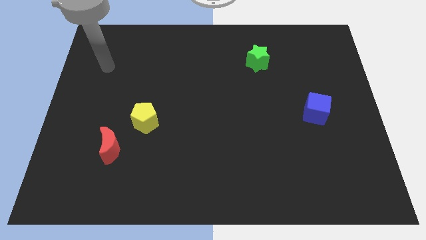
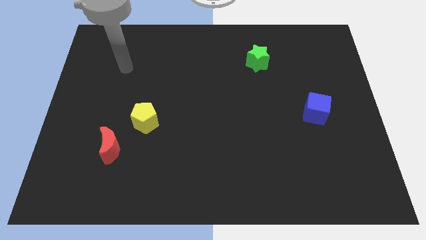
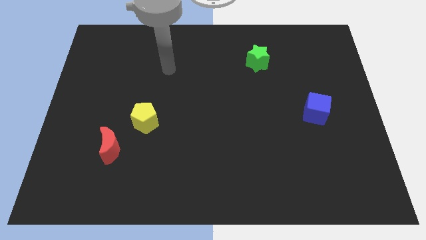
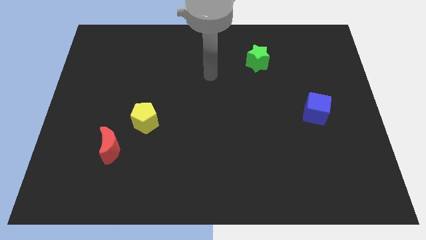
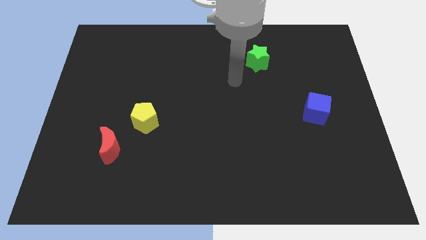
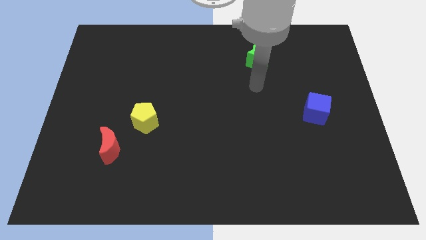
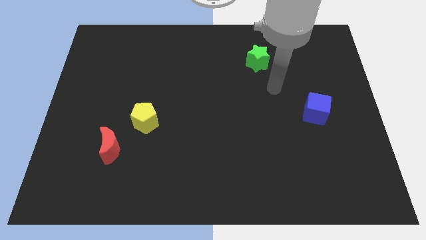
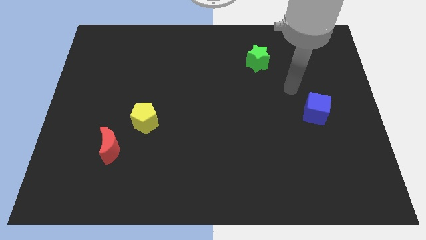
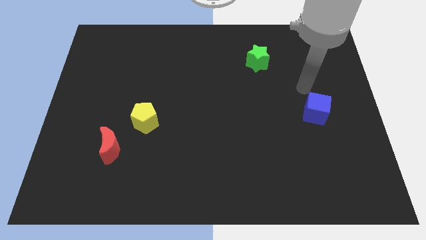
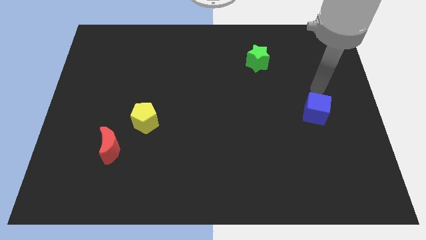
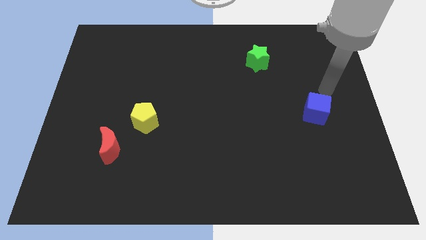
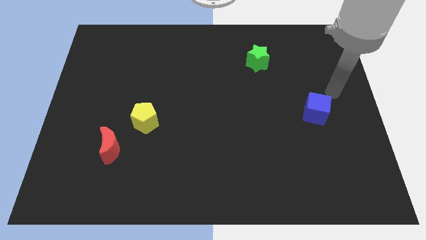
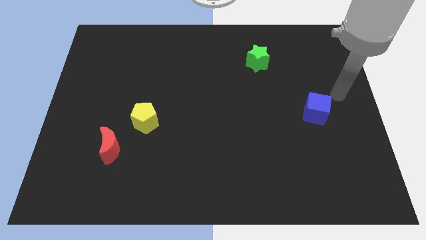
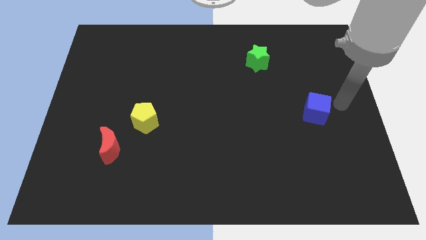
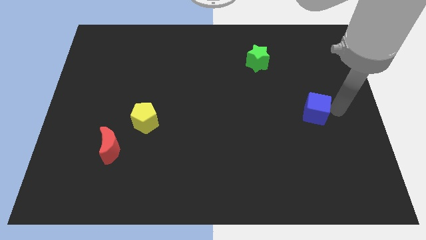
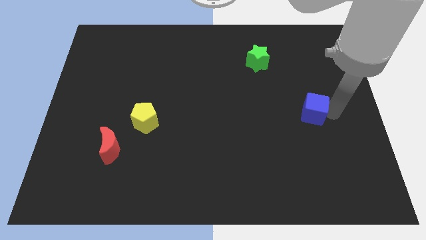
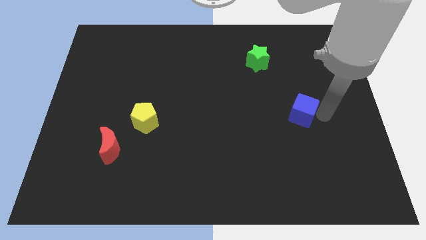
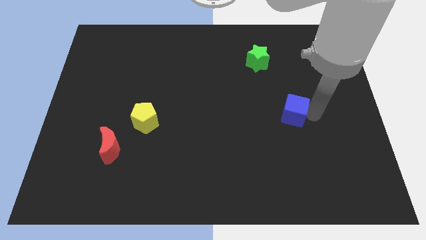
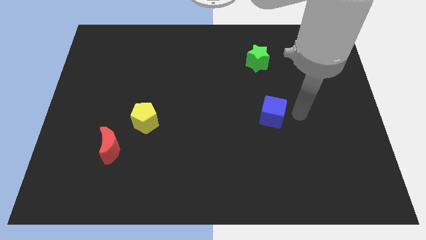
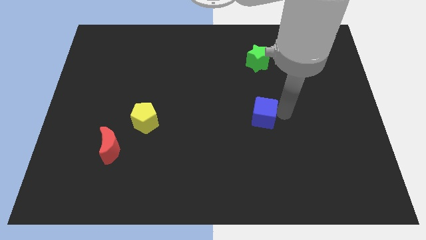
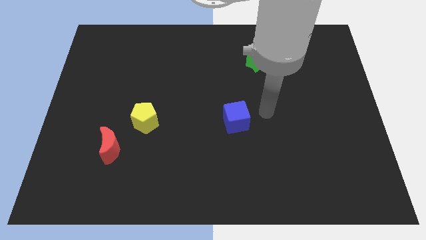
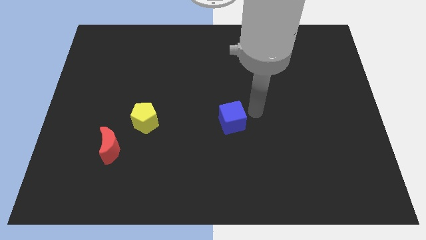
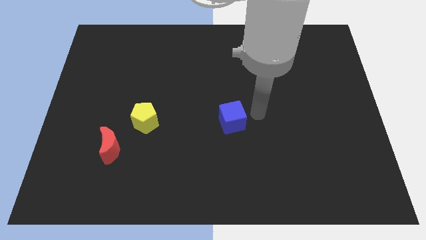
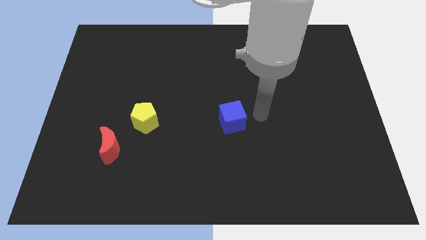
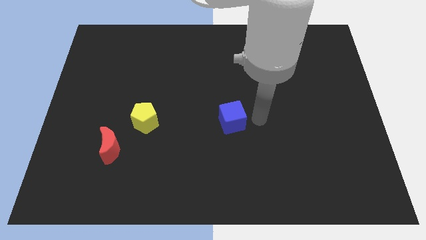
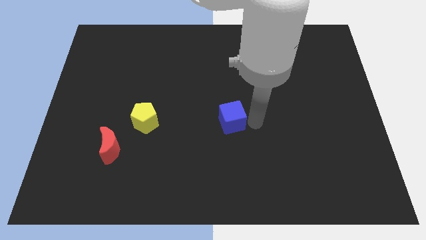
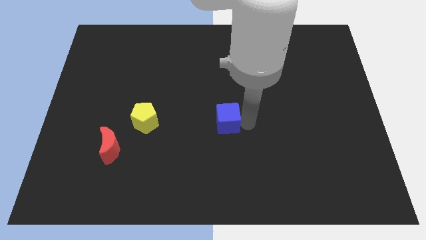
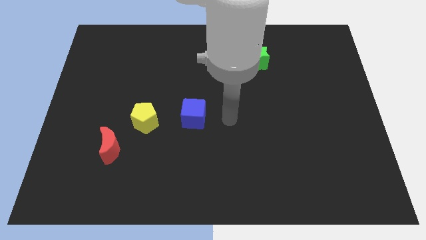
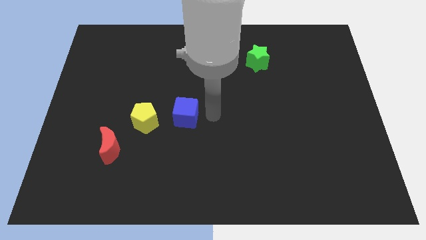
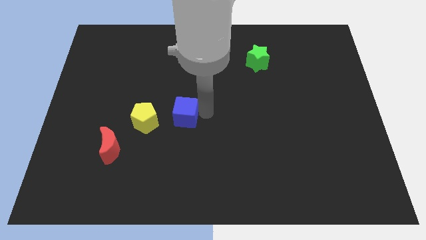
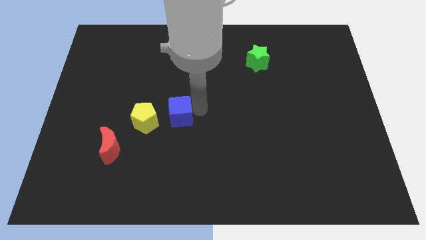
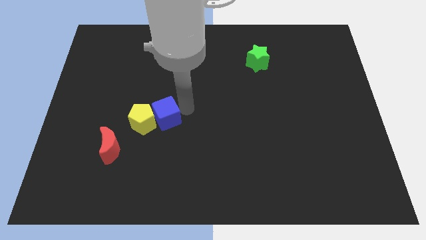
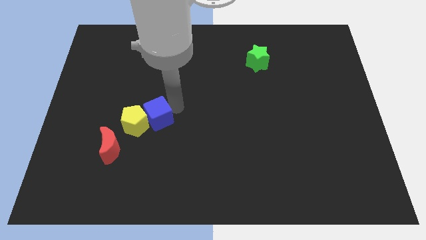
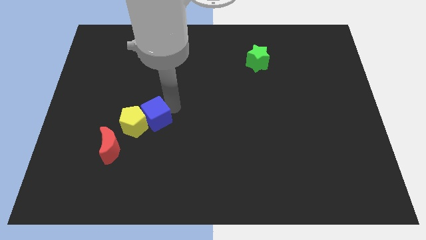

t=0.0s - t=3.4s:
put the blue block next to the yellow block

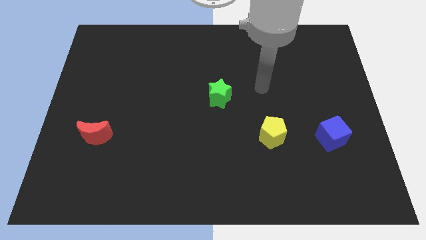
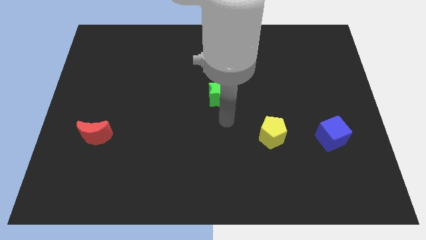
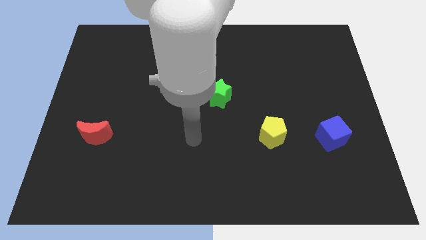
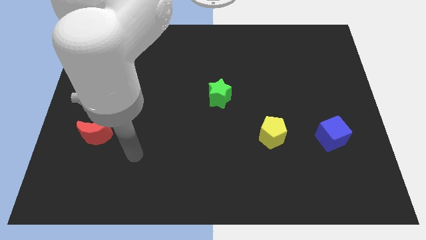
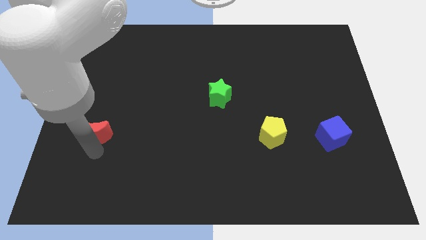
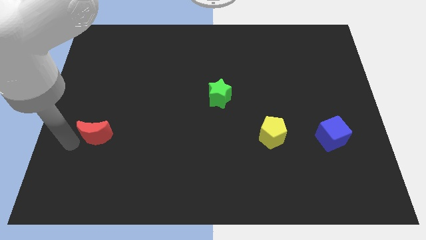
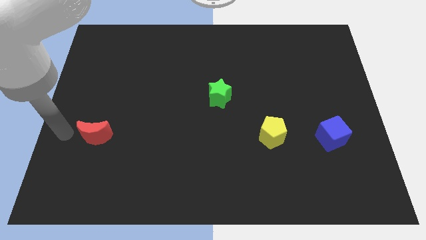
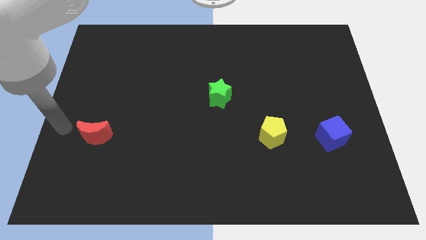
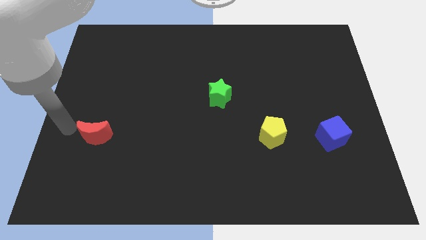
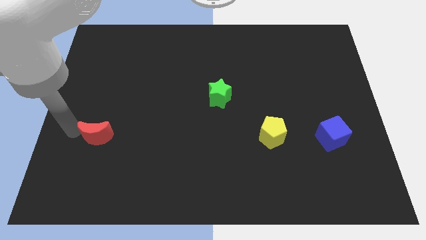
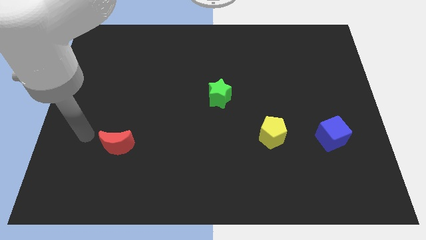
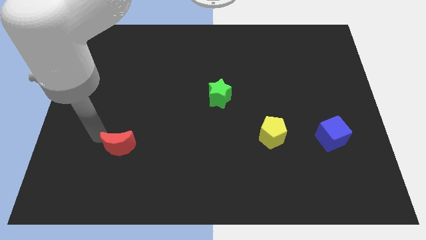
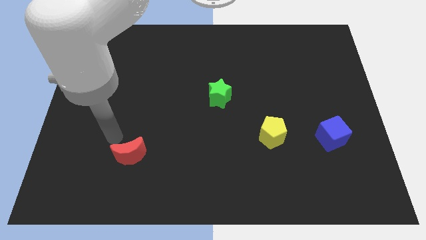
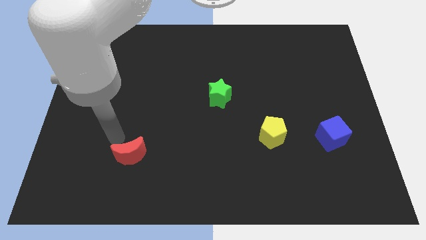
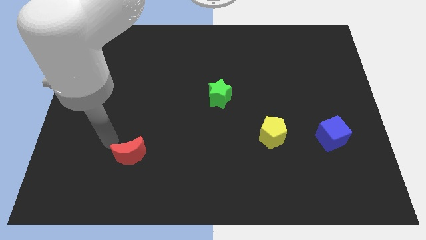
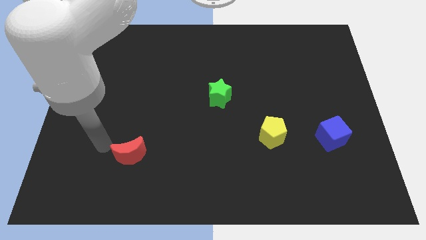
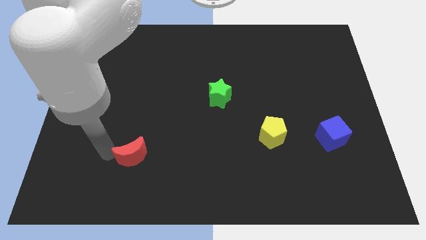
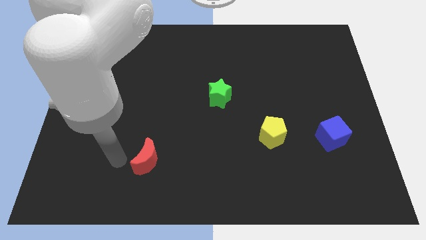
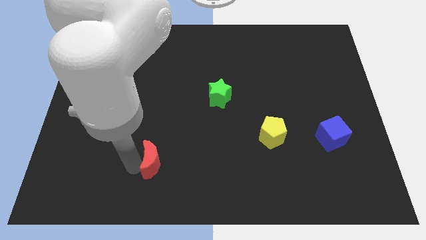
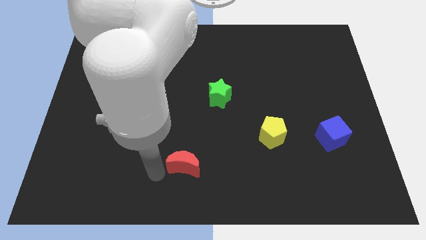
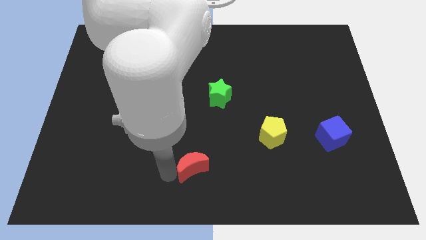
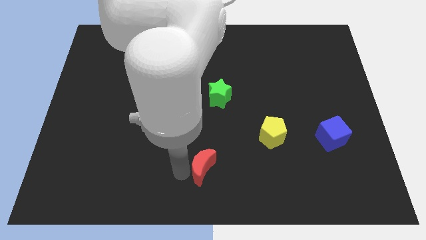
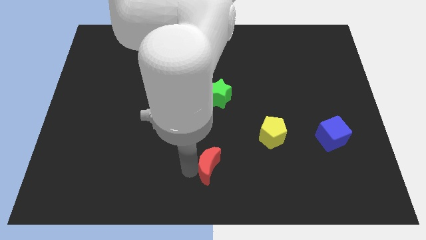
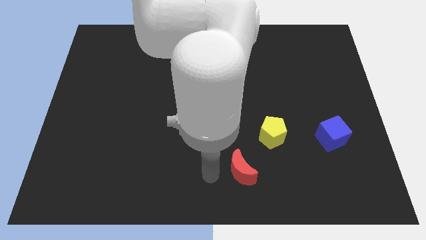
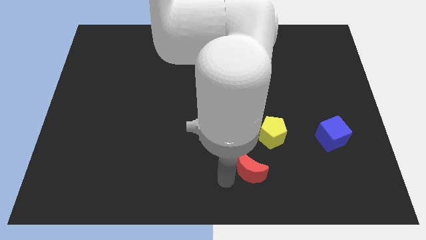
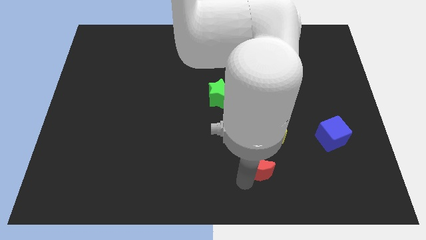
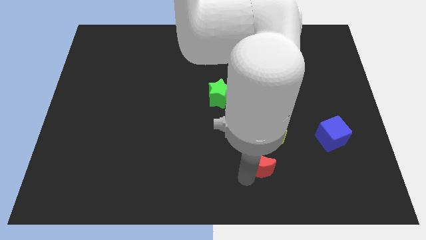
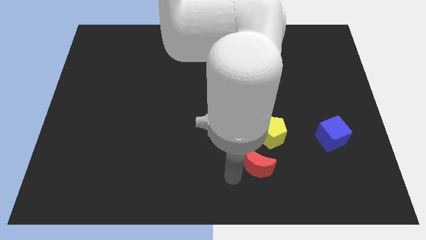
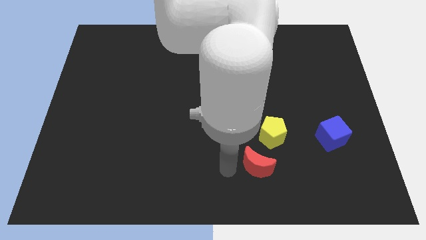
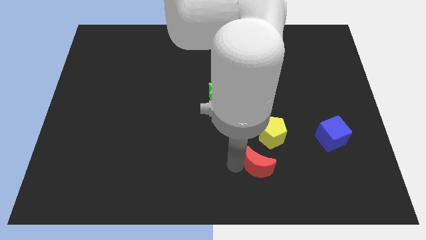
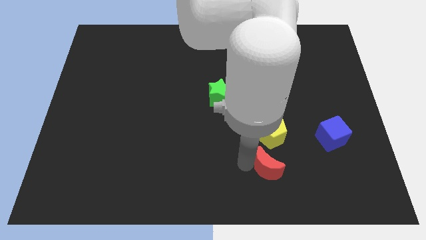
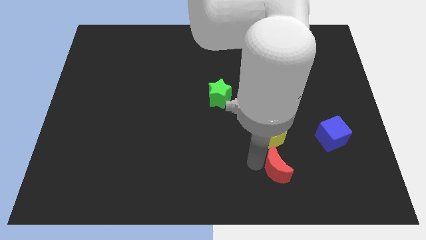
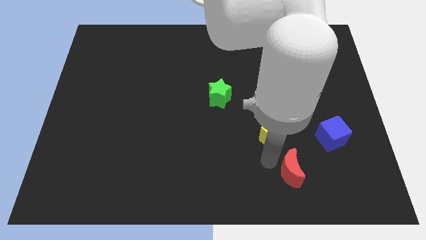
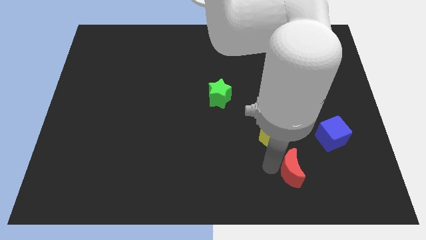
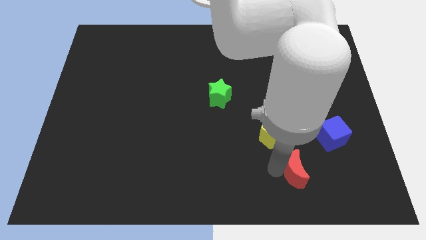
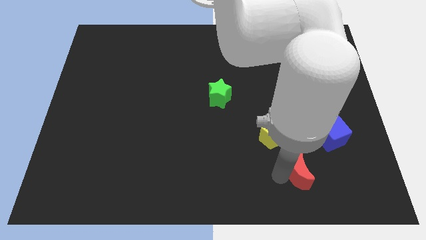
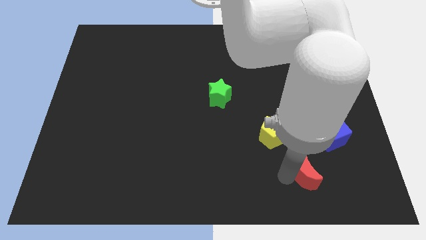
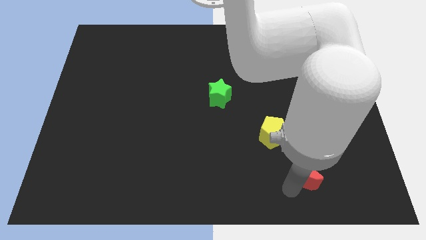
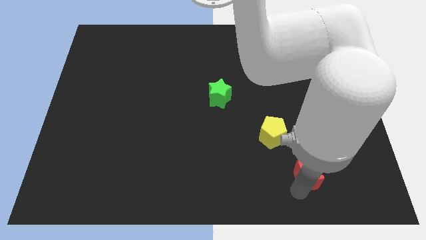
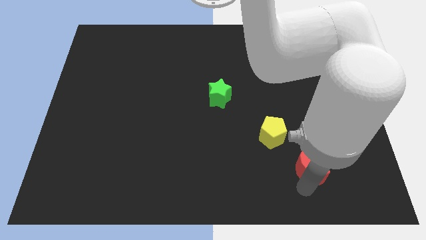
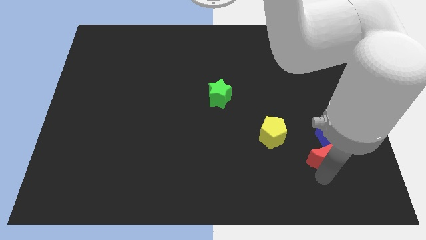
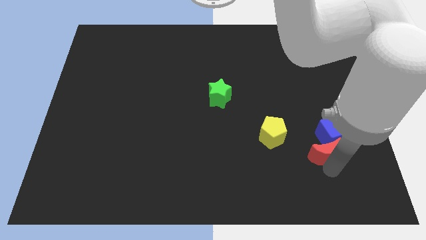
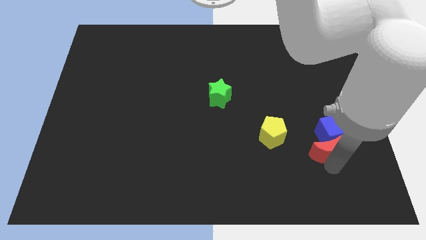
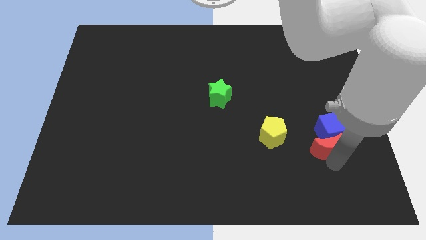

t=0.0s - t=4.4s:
push the red moon towards the blue cube

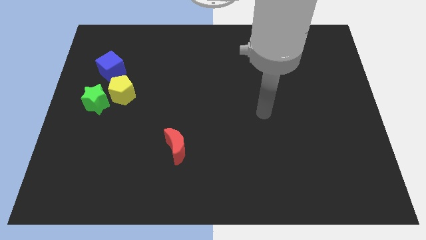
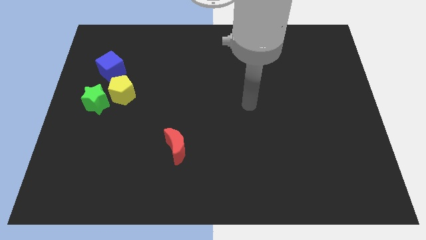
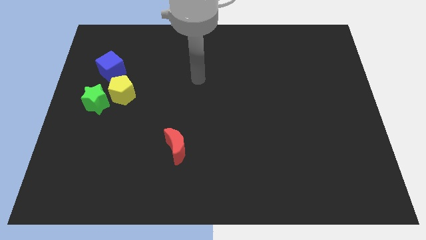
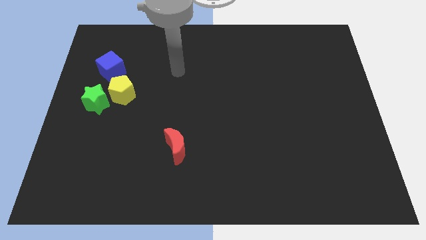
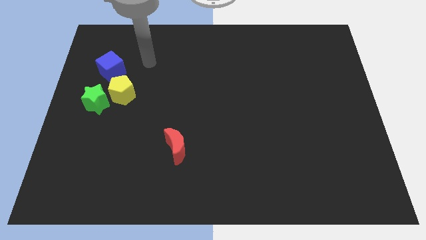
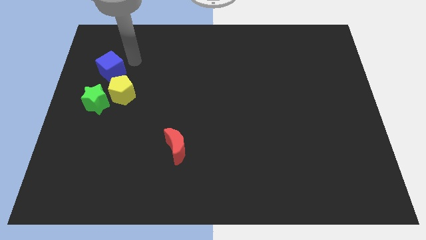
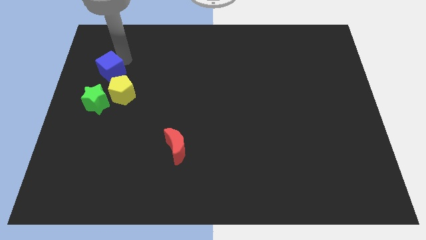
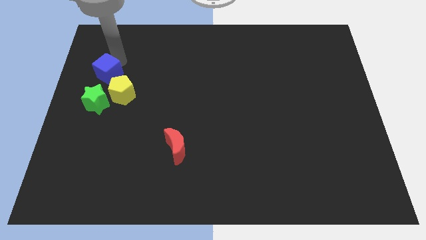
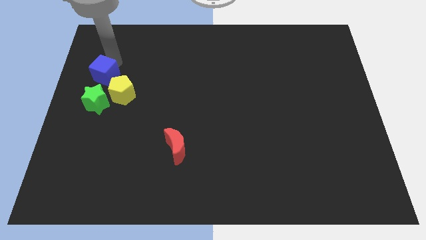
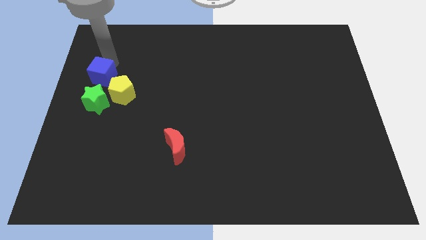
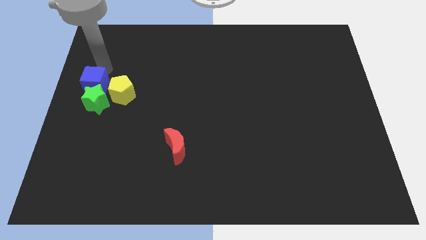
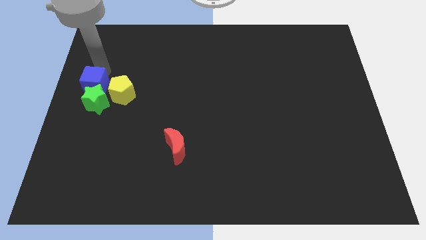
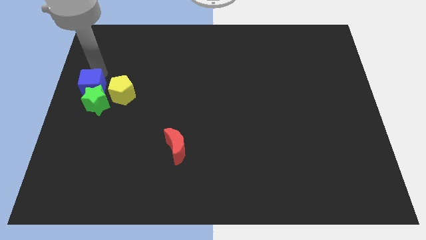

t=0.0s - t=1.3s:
move the cube close to the green block
